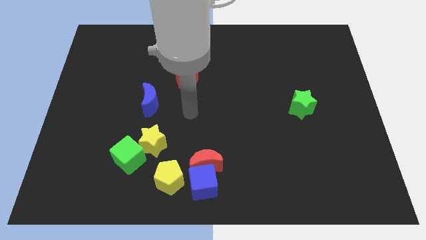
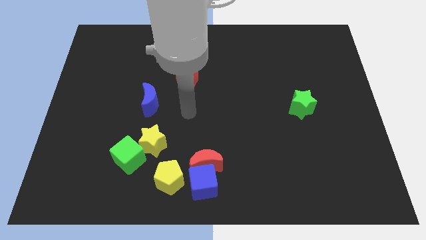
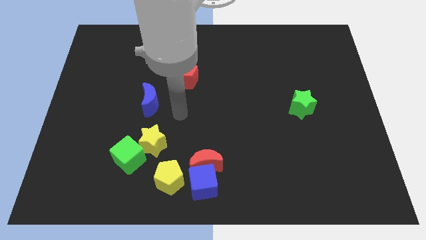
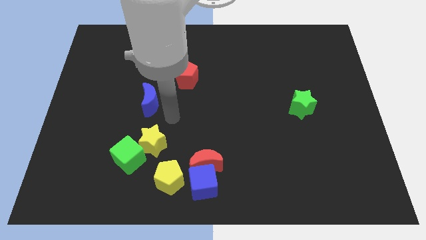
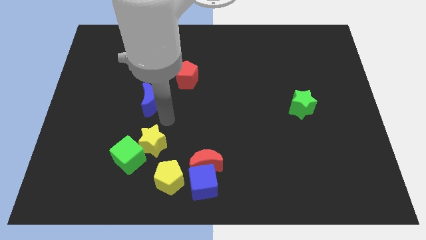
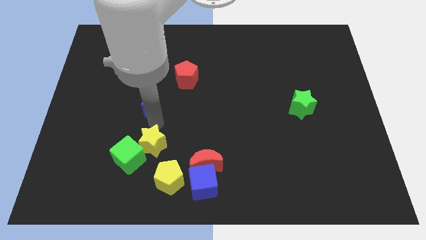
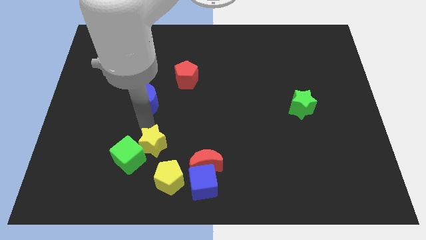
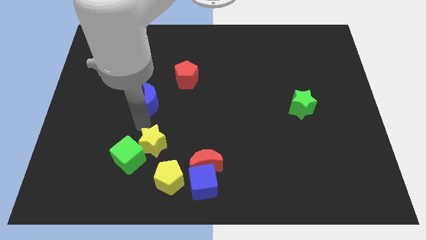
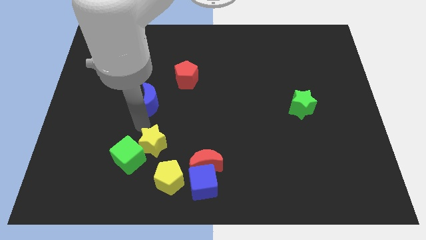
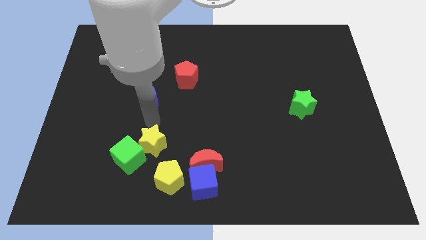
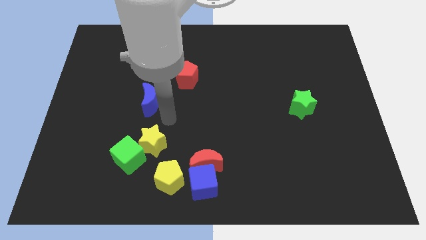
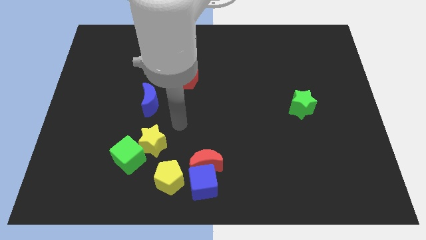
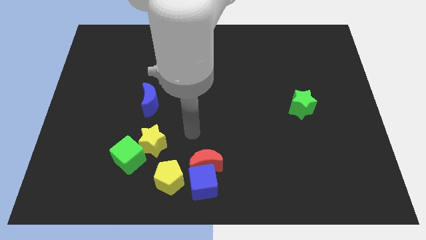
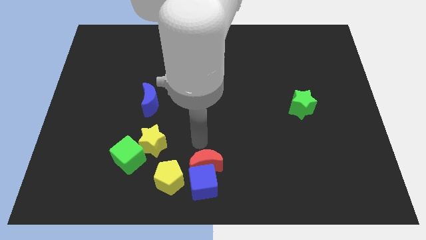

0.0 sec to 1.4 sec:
move your arm to the top side of the red moon

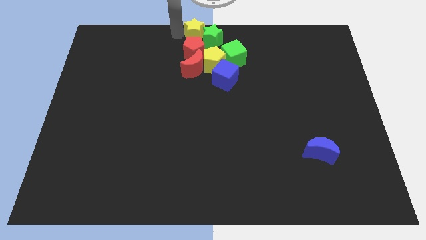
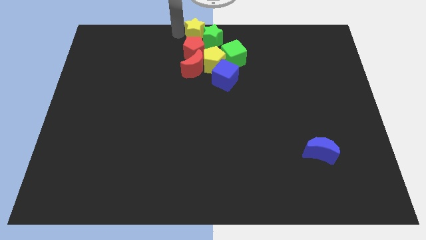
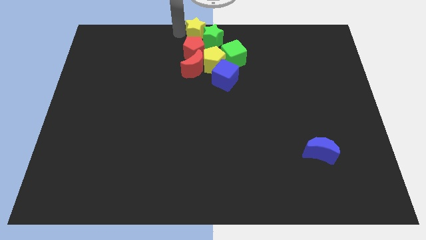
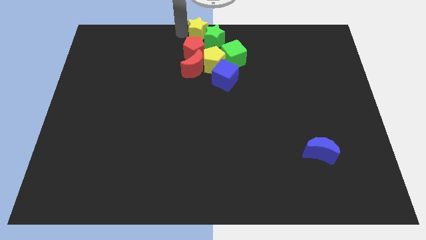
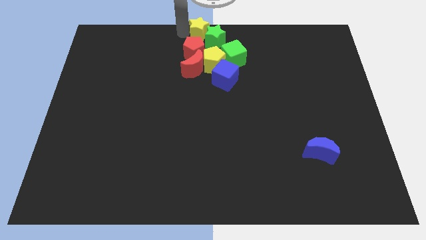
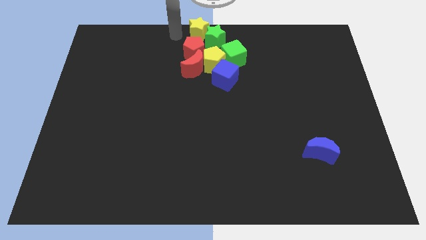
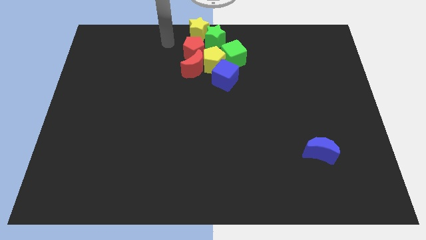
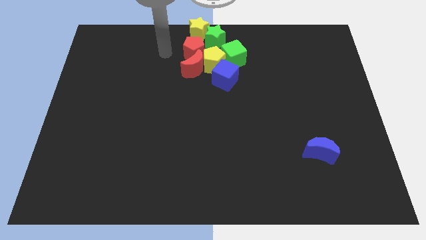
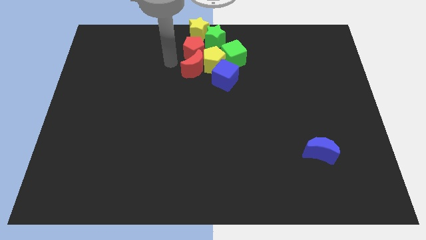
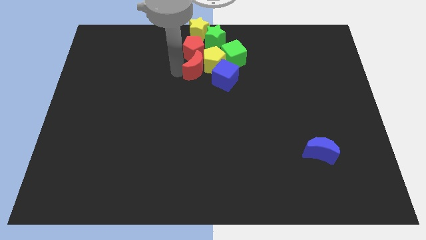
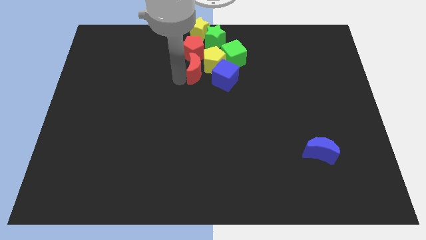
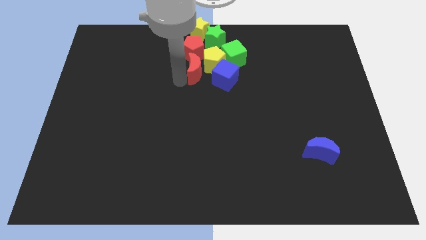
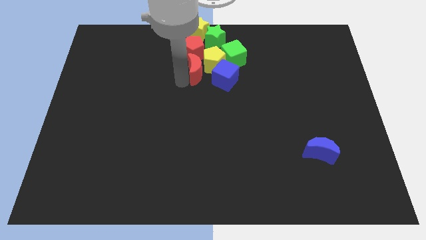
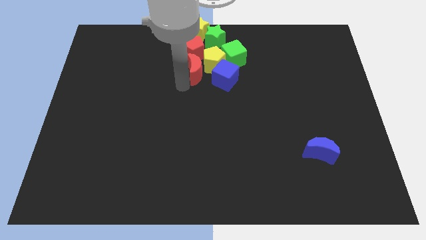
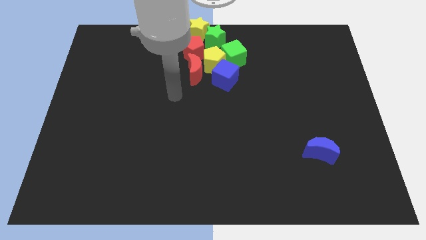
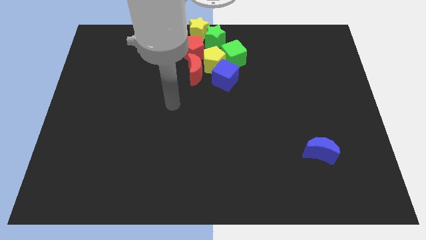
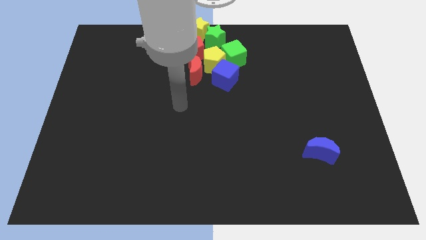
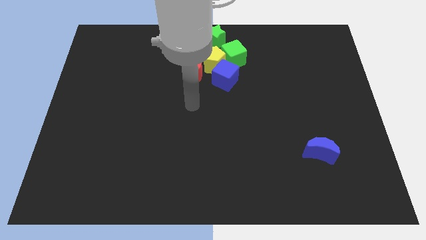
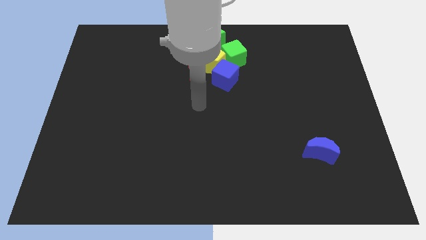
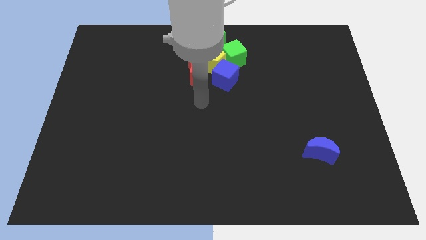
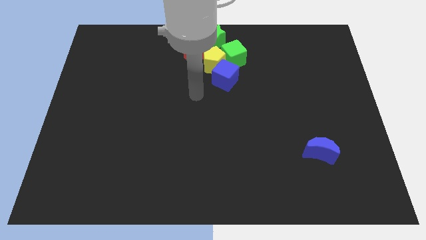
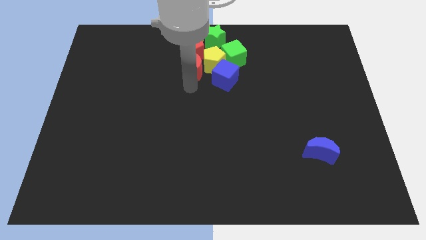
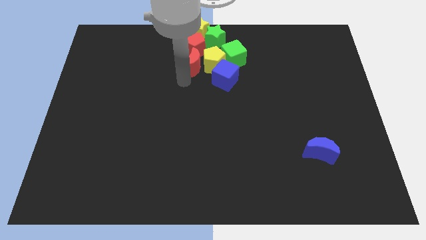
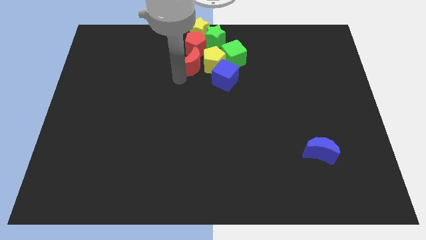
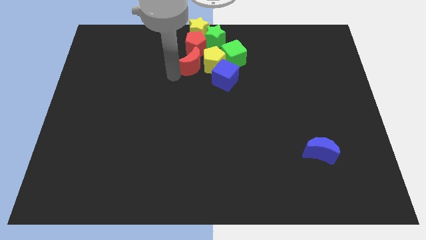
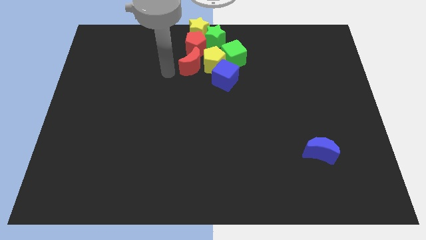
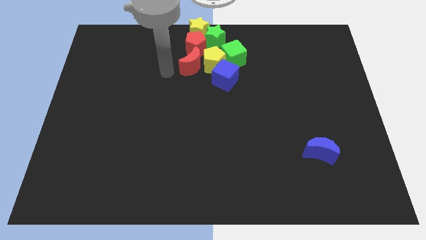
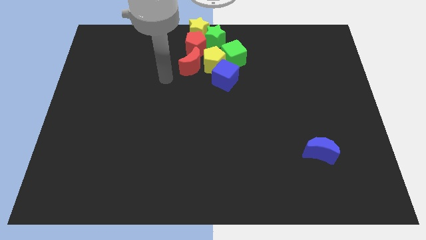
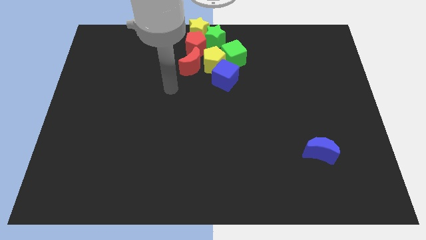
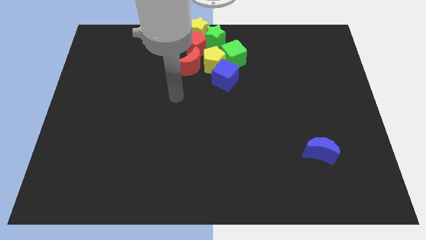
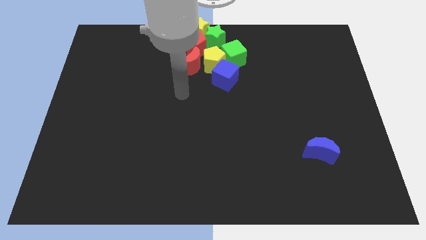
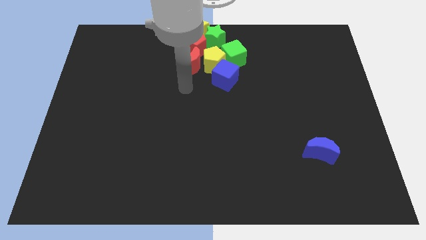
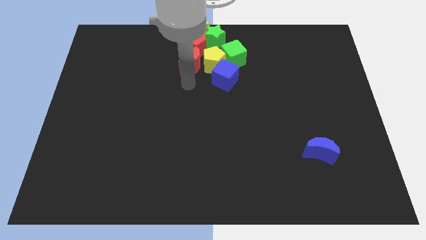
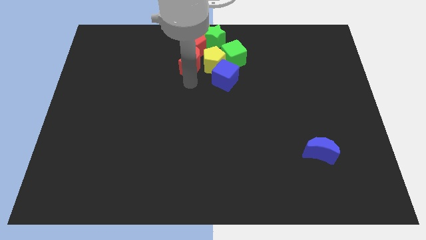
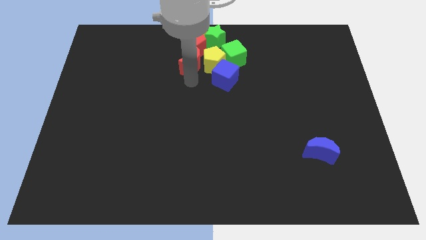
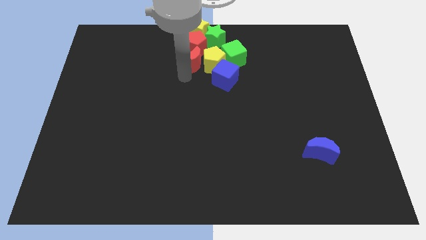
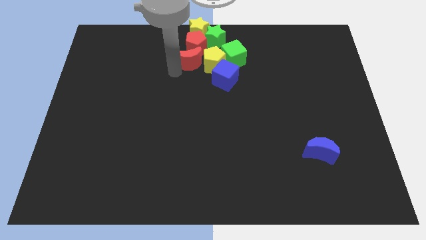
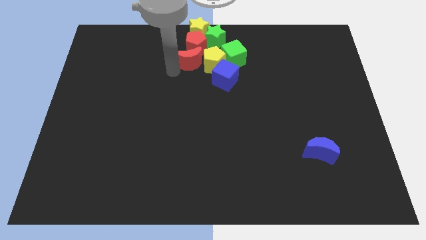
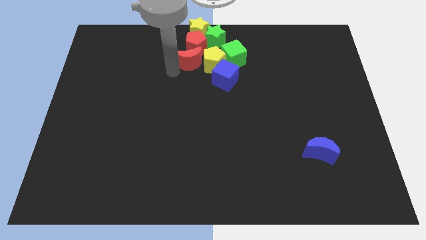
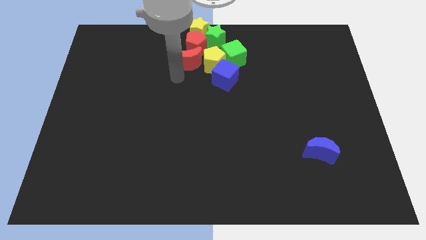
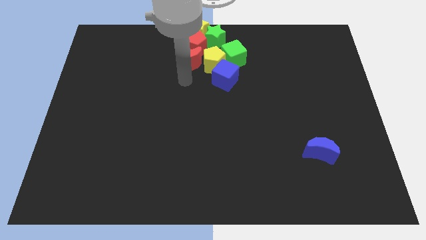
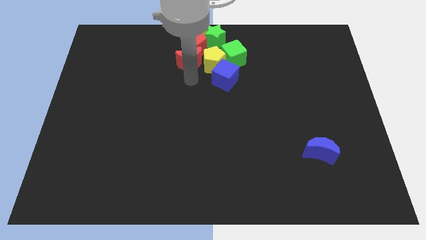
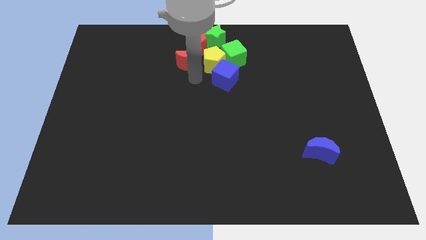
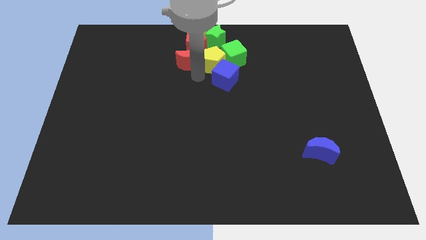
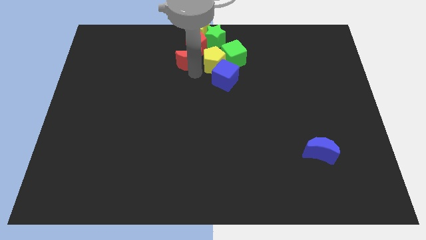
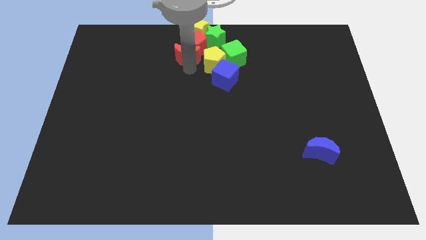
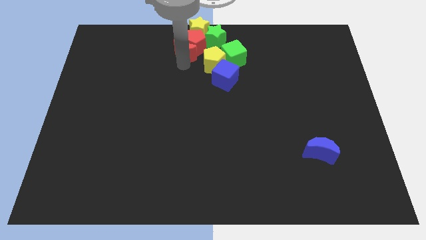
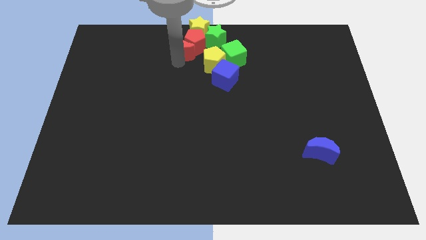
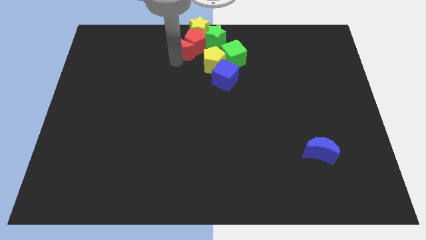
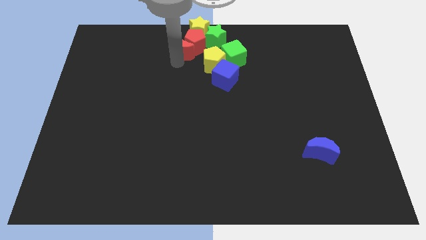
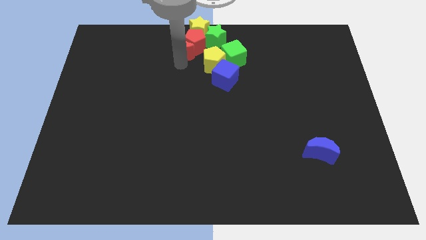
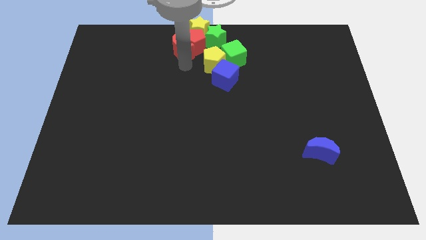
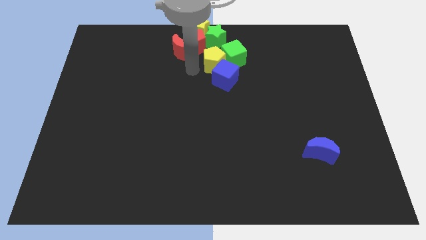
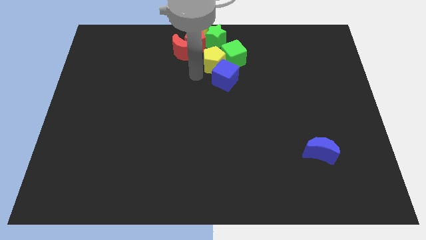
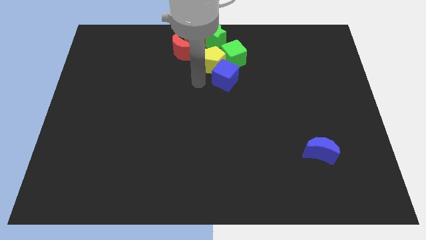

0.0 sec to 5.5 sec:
slide the red crescent to the bottom left of the red pentagon

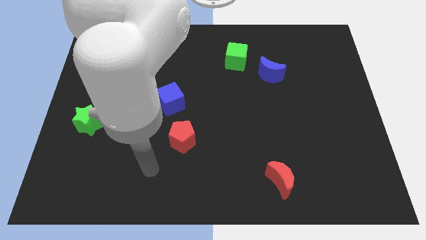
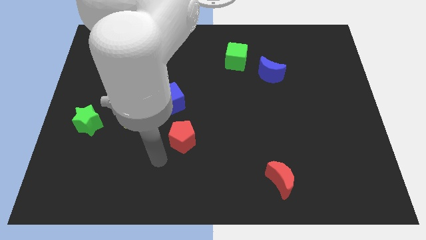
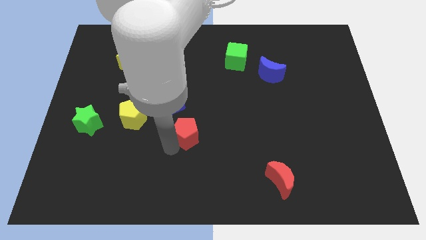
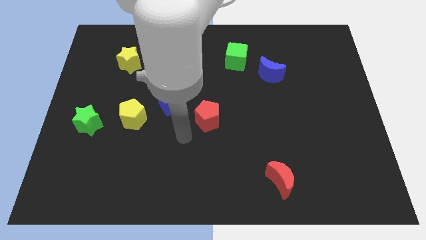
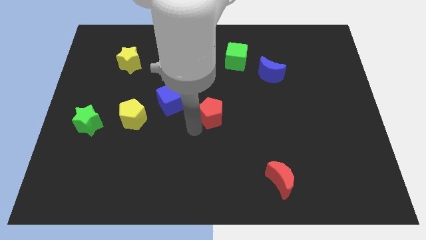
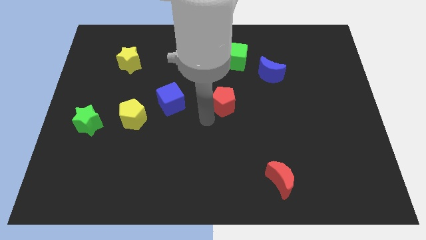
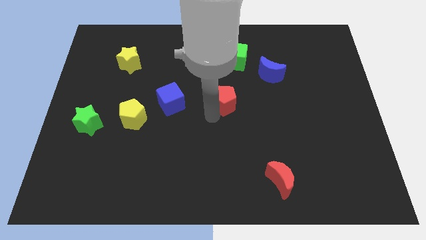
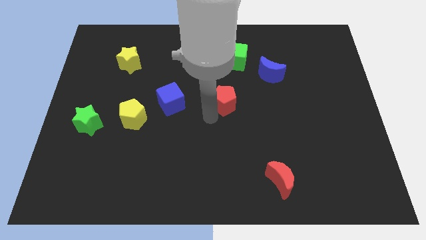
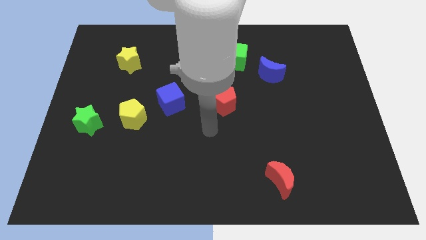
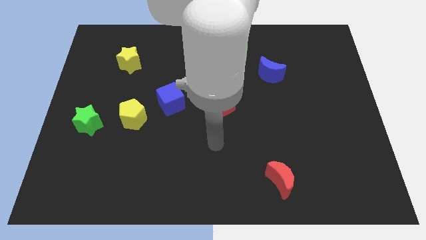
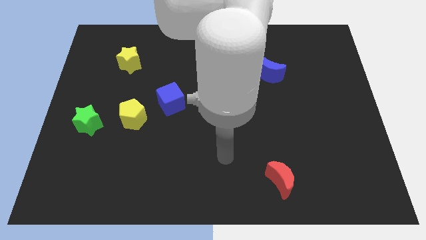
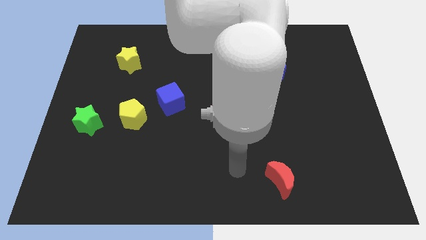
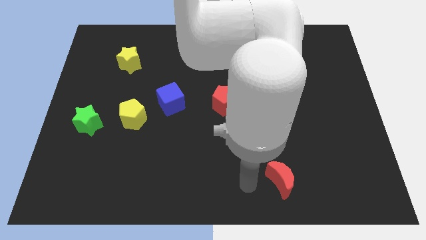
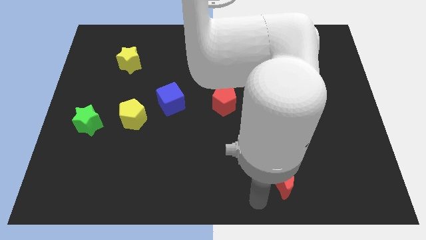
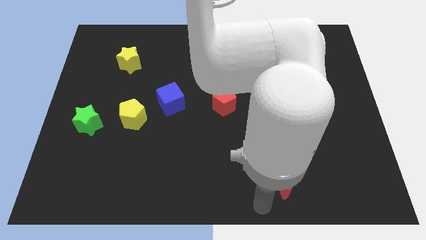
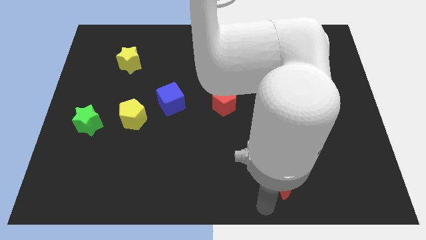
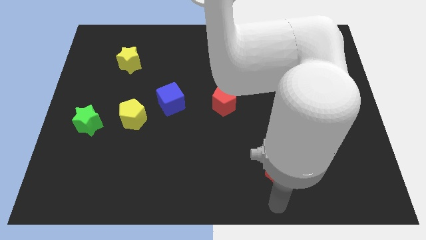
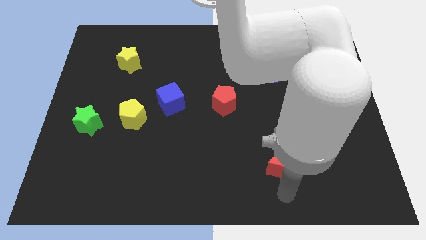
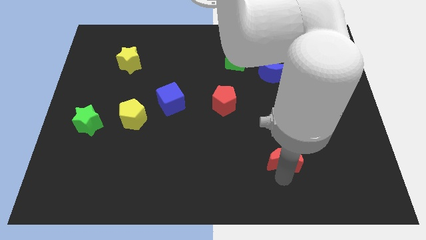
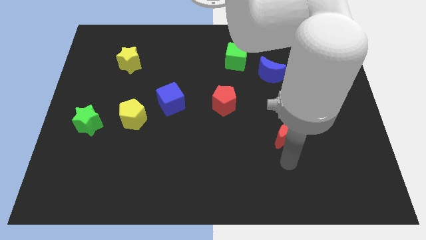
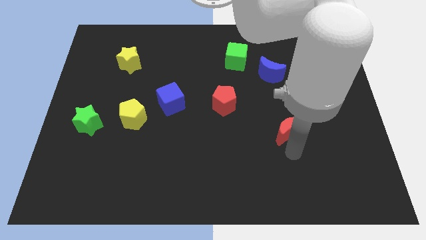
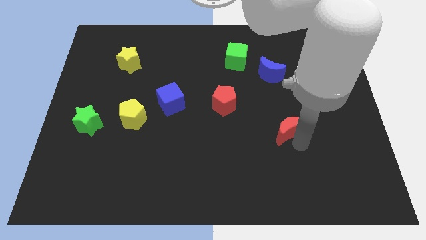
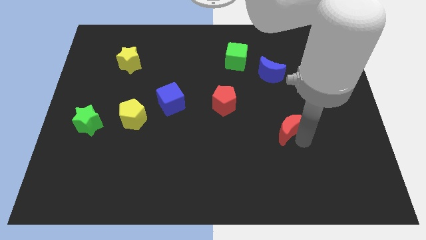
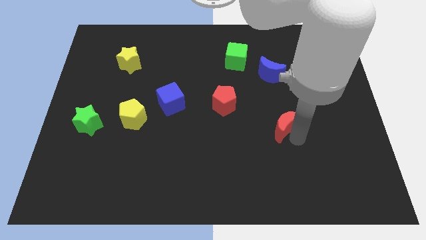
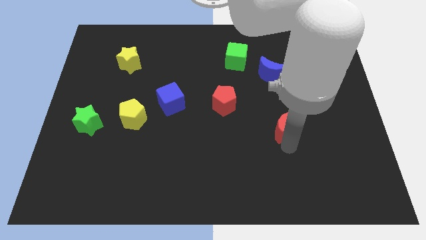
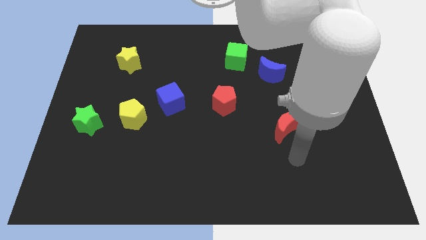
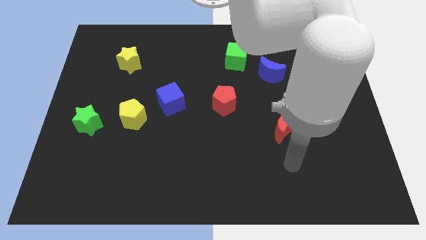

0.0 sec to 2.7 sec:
push red crescent slightly towards up
